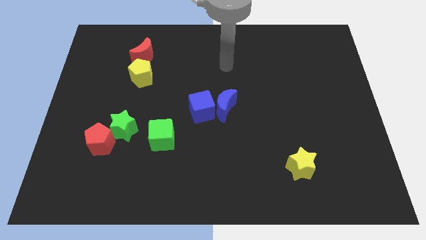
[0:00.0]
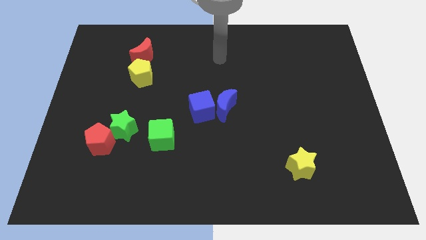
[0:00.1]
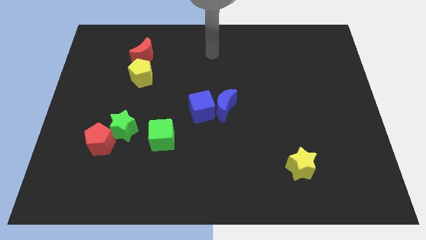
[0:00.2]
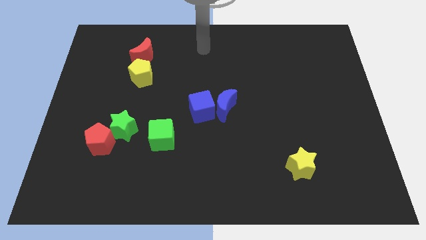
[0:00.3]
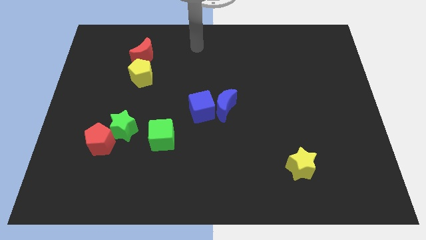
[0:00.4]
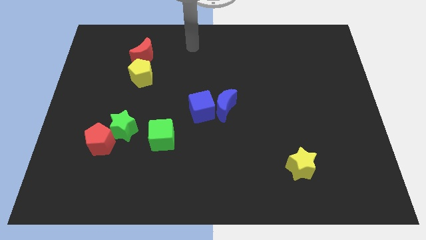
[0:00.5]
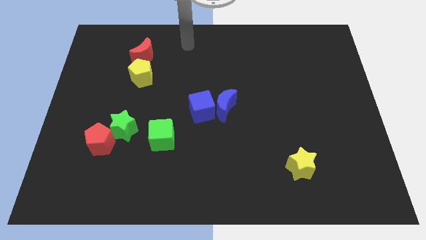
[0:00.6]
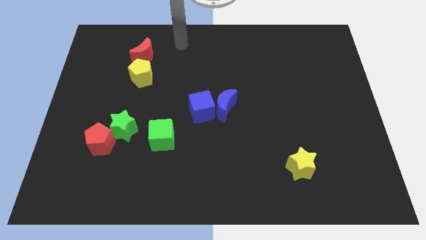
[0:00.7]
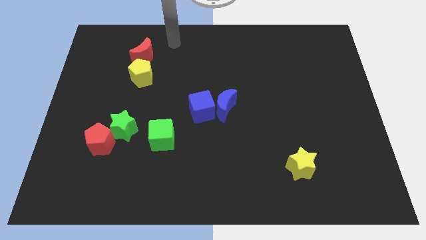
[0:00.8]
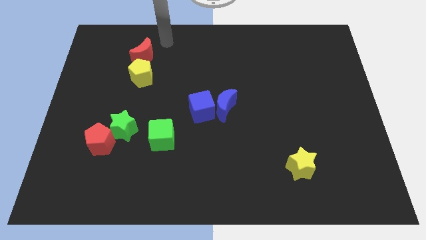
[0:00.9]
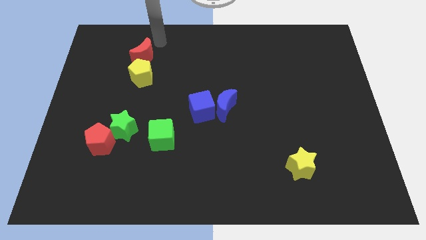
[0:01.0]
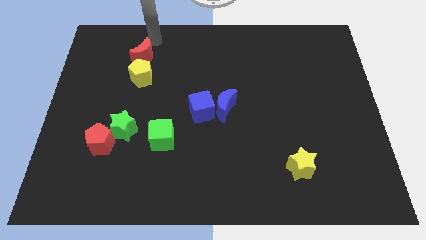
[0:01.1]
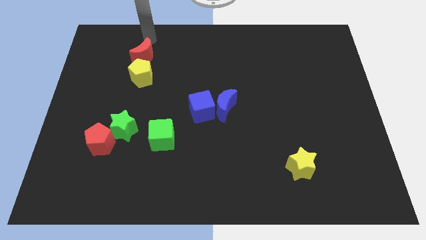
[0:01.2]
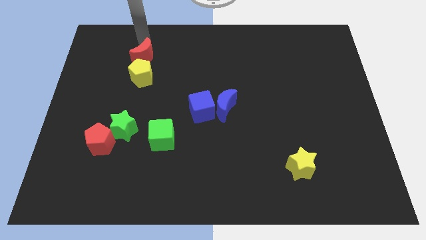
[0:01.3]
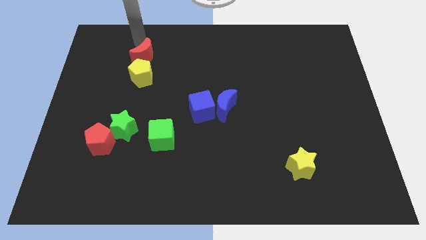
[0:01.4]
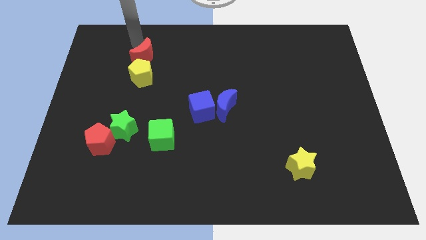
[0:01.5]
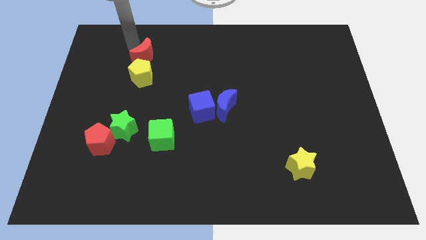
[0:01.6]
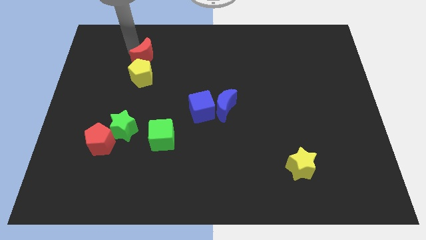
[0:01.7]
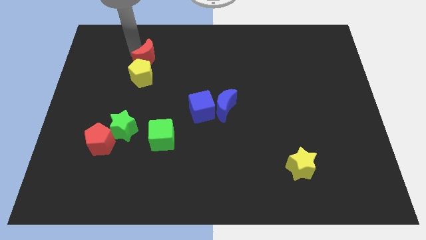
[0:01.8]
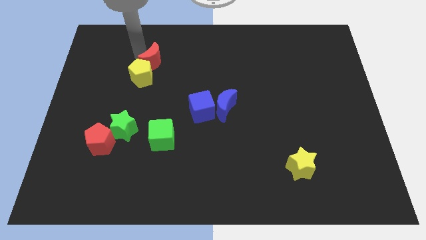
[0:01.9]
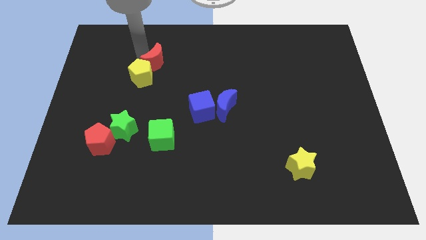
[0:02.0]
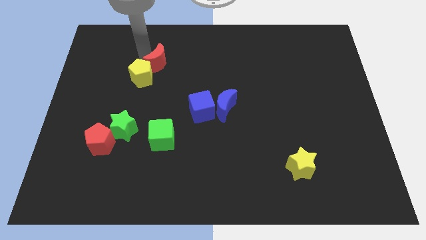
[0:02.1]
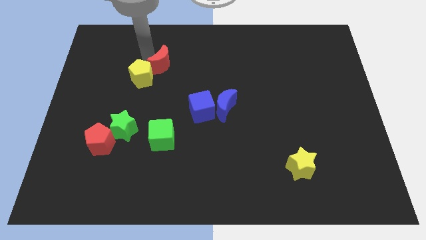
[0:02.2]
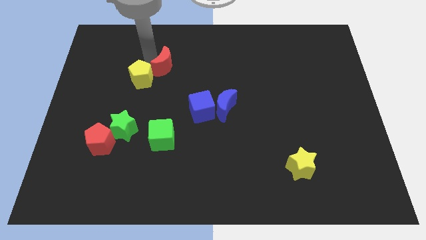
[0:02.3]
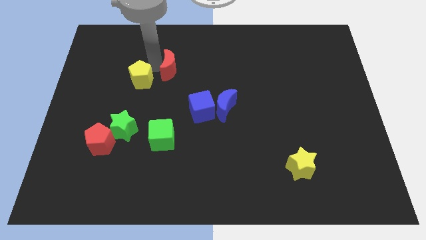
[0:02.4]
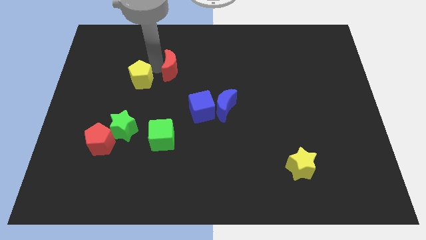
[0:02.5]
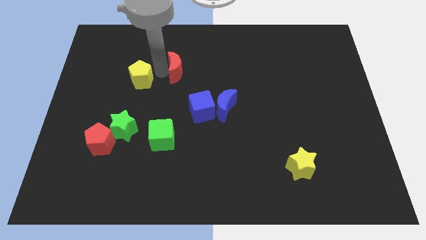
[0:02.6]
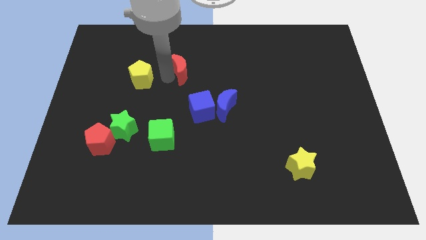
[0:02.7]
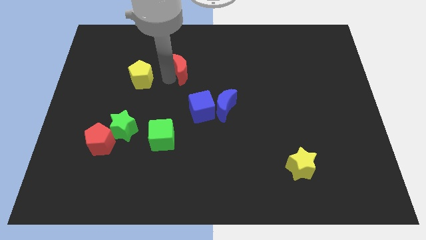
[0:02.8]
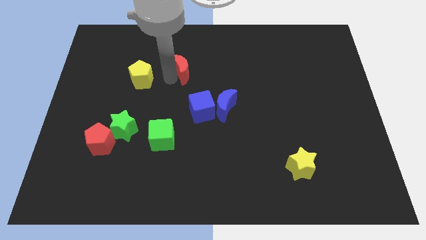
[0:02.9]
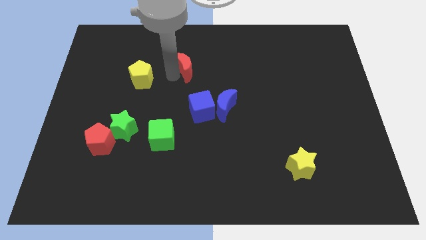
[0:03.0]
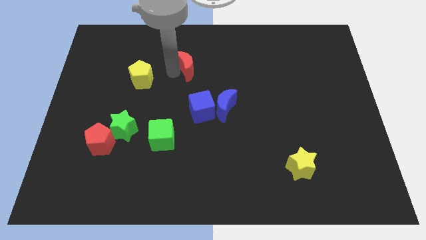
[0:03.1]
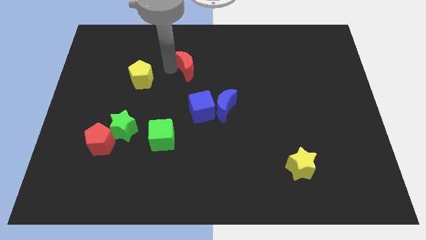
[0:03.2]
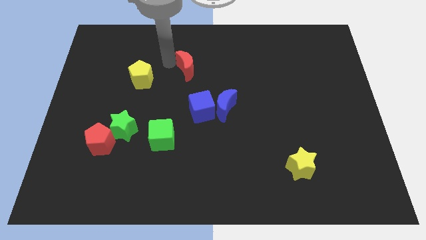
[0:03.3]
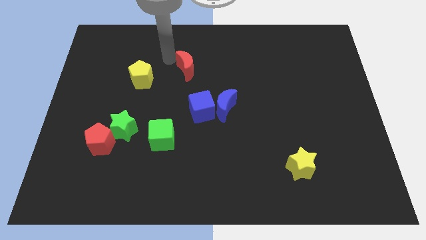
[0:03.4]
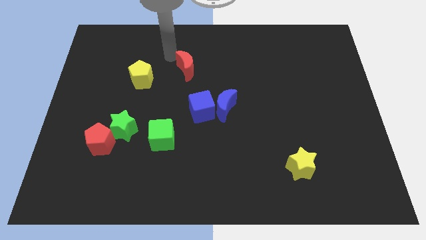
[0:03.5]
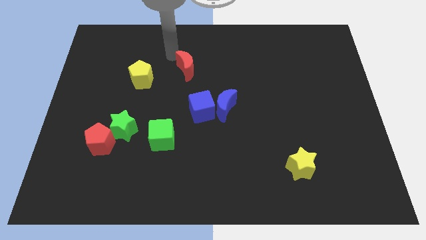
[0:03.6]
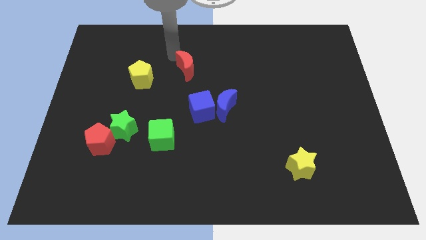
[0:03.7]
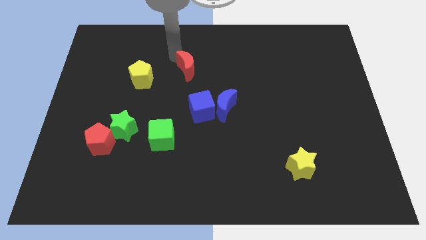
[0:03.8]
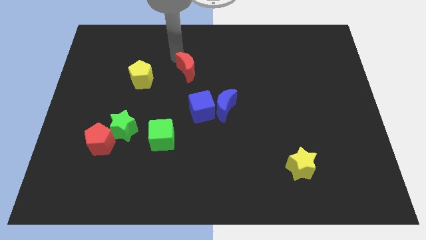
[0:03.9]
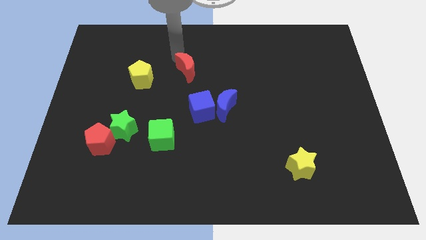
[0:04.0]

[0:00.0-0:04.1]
slide red moon to the right of yellow pentagon

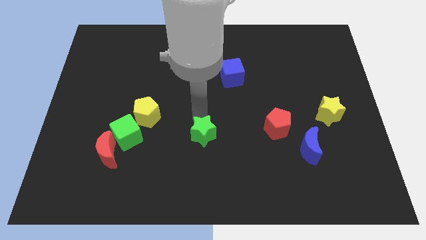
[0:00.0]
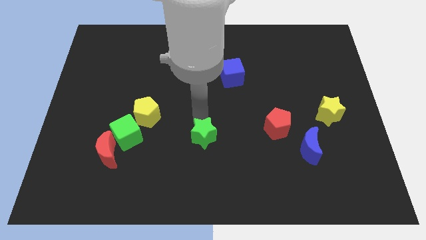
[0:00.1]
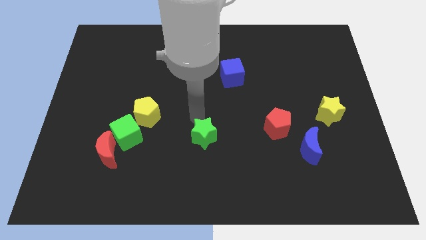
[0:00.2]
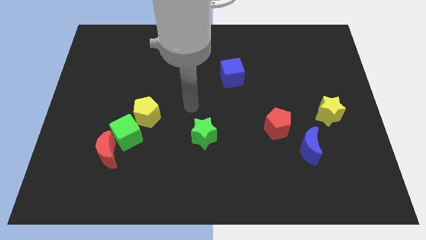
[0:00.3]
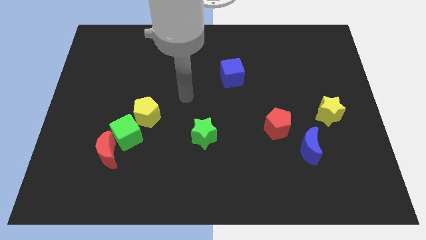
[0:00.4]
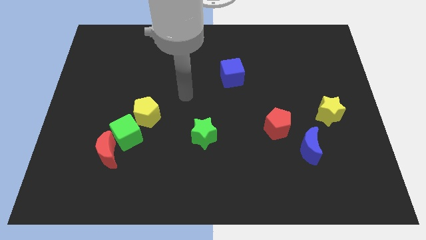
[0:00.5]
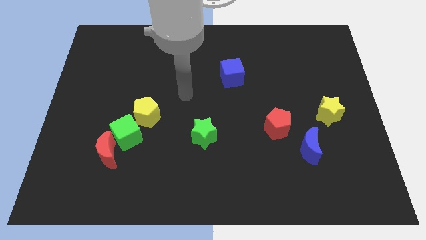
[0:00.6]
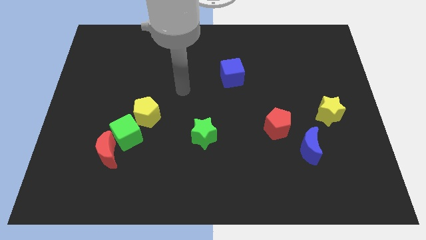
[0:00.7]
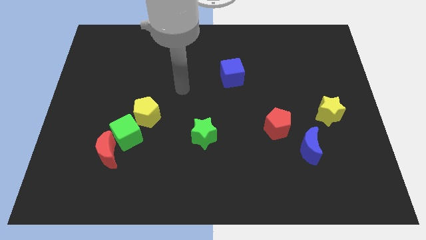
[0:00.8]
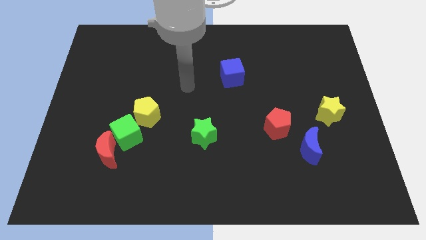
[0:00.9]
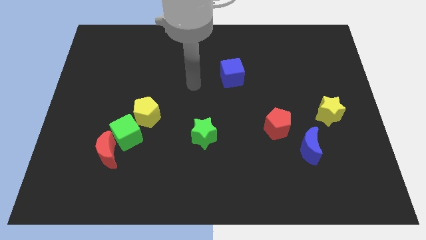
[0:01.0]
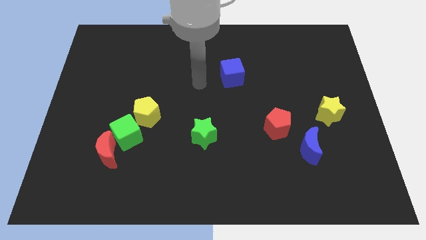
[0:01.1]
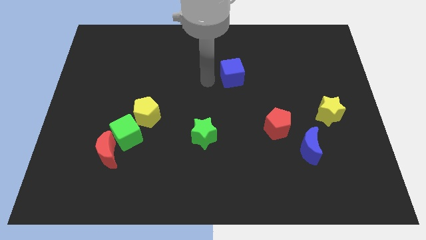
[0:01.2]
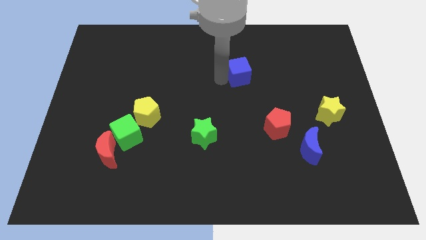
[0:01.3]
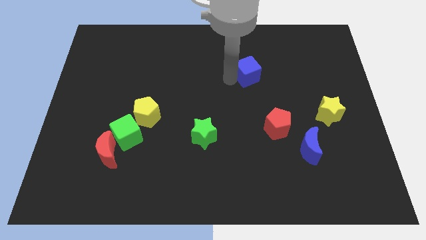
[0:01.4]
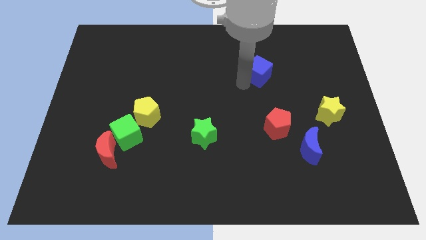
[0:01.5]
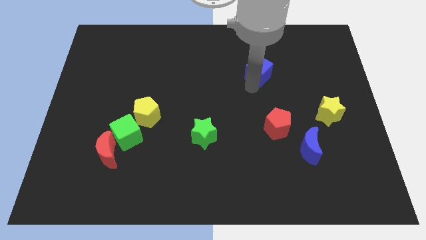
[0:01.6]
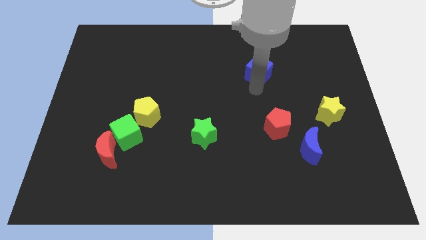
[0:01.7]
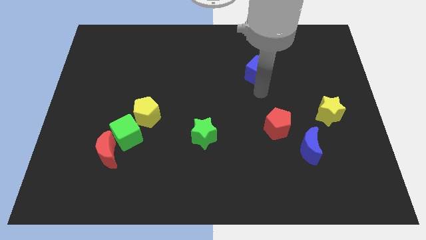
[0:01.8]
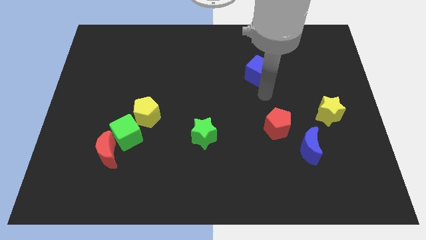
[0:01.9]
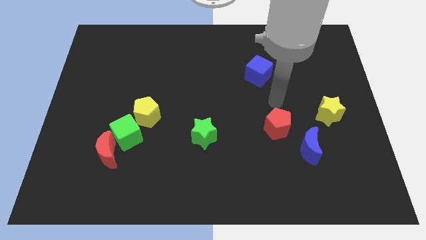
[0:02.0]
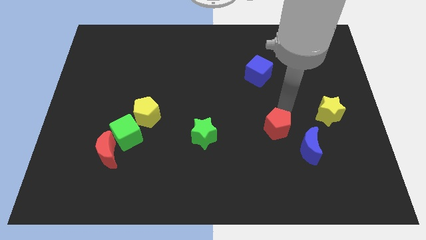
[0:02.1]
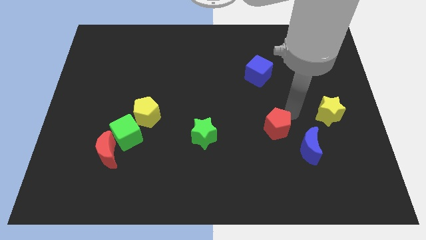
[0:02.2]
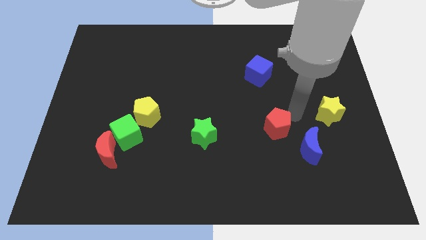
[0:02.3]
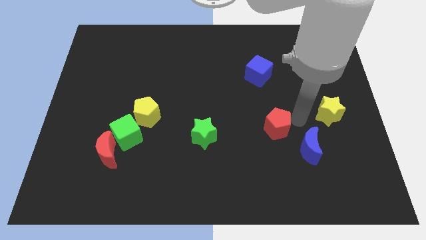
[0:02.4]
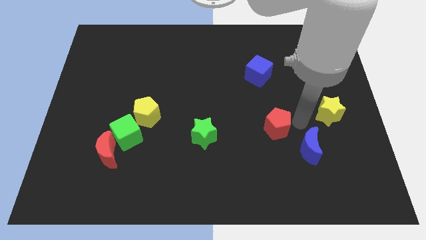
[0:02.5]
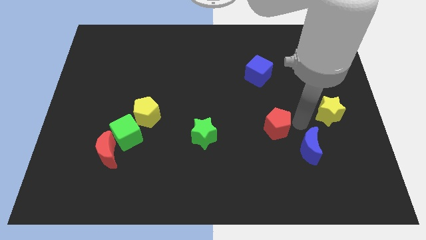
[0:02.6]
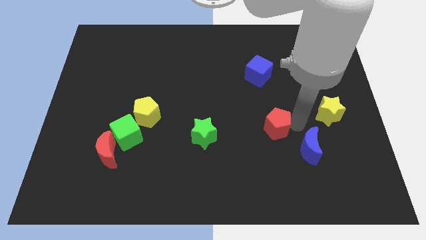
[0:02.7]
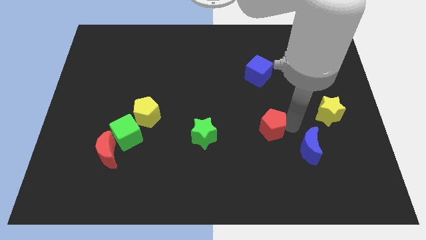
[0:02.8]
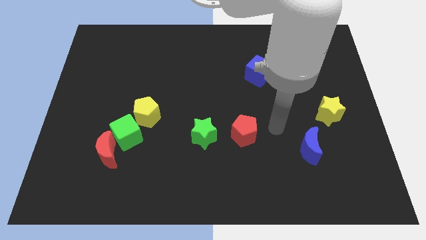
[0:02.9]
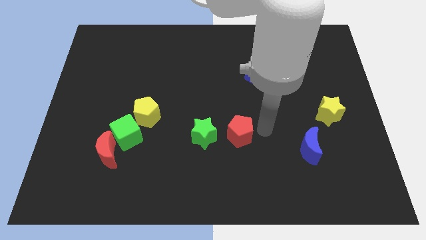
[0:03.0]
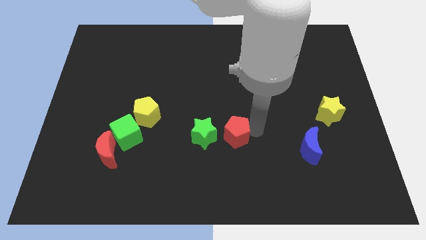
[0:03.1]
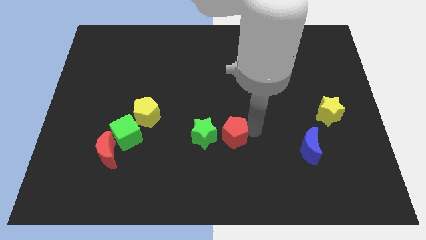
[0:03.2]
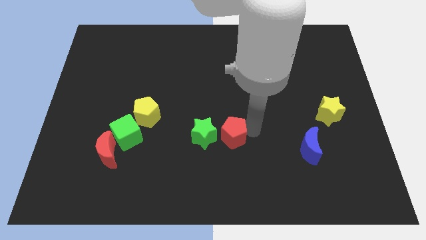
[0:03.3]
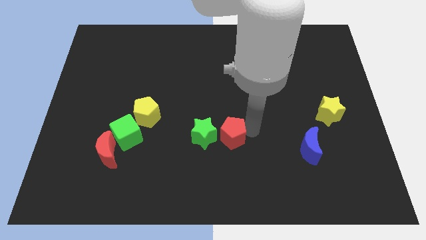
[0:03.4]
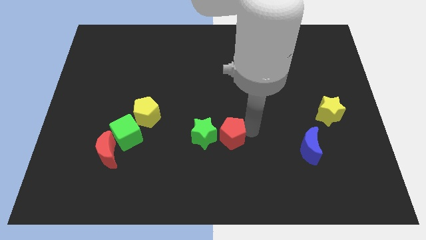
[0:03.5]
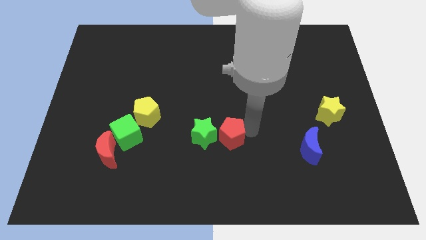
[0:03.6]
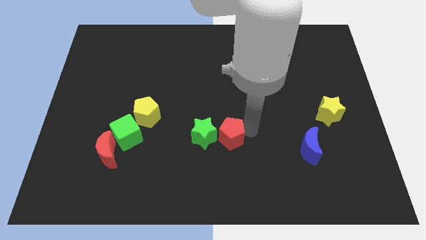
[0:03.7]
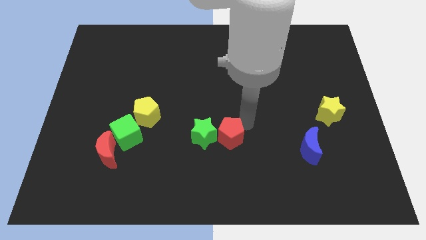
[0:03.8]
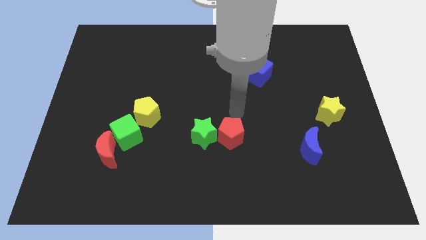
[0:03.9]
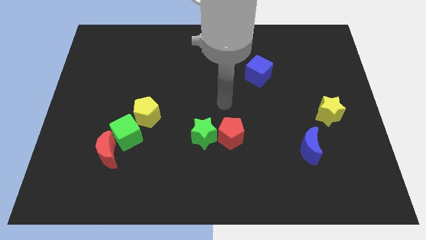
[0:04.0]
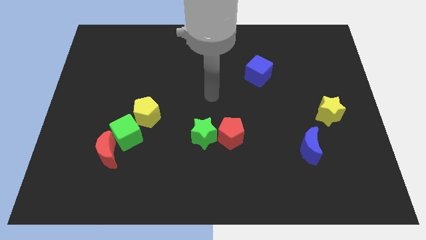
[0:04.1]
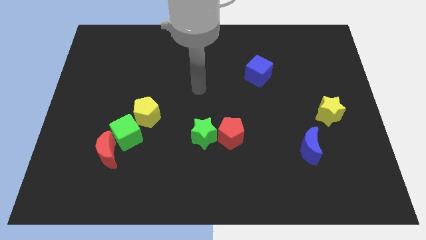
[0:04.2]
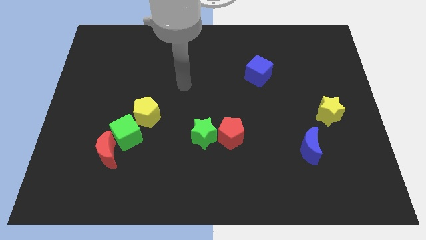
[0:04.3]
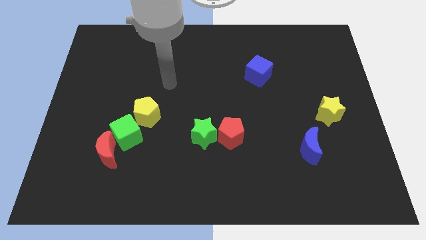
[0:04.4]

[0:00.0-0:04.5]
move the red pentagon to the right of the green star

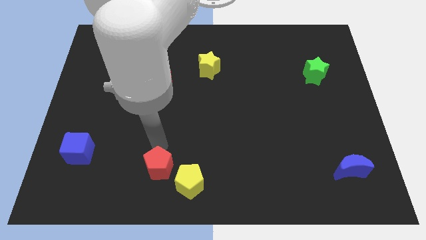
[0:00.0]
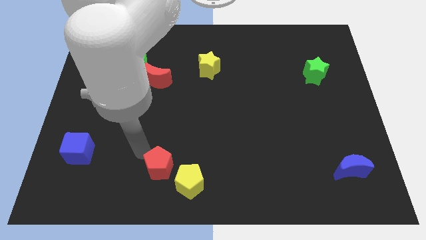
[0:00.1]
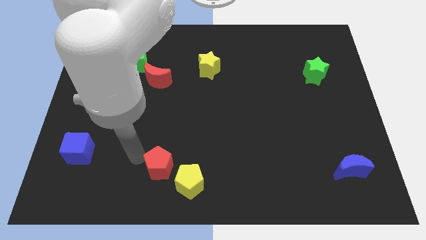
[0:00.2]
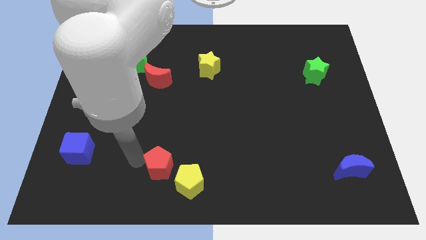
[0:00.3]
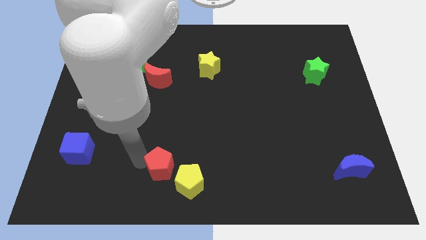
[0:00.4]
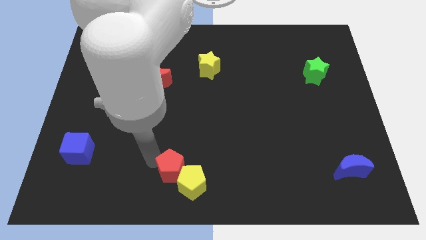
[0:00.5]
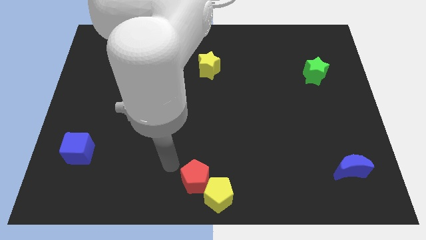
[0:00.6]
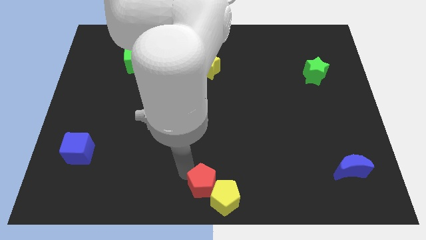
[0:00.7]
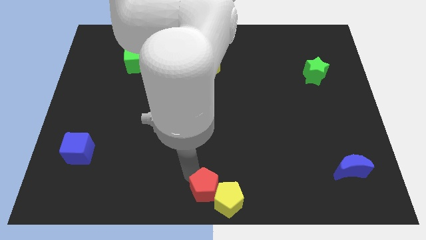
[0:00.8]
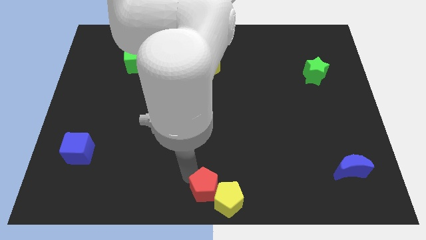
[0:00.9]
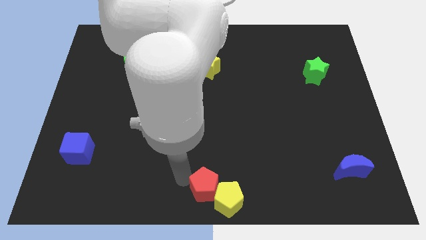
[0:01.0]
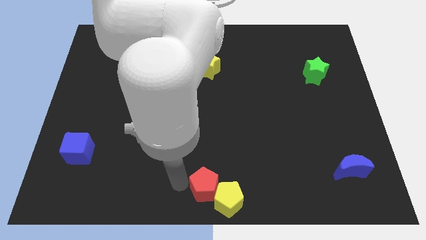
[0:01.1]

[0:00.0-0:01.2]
move the red pentagon into the yellow pentagon
